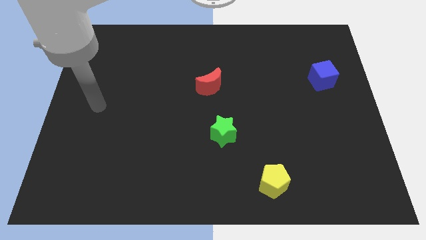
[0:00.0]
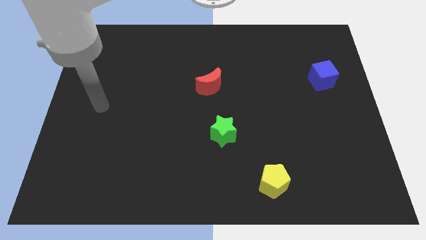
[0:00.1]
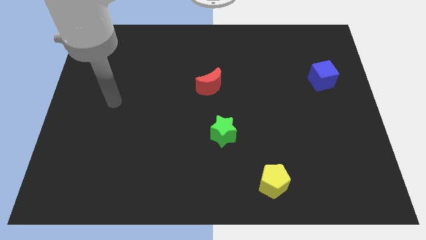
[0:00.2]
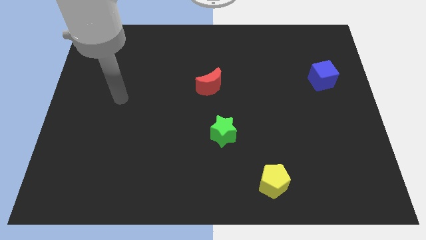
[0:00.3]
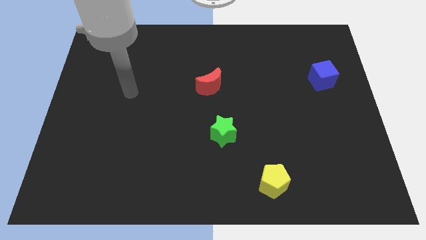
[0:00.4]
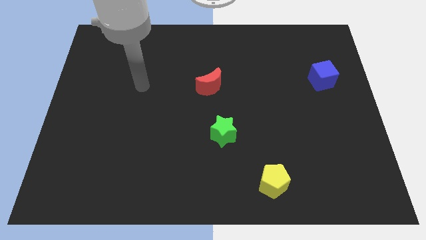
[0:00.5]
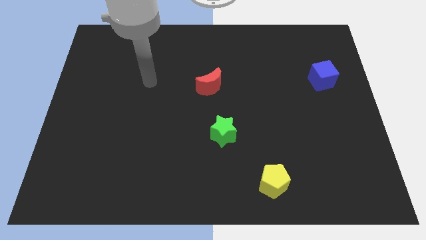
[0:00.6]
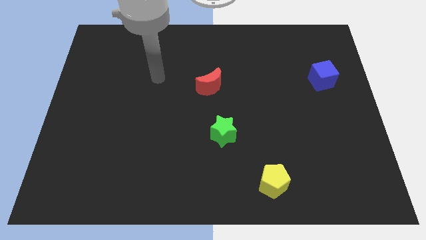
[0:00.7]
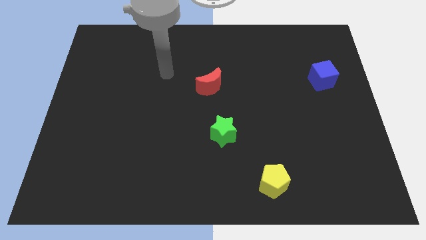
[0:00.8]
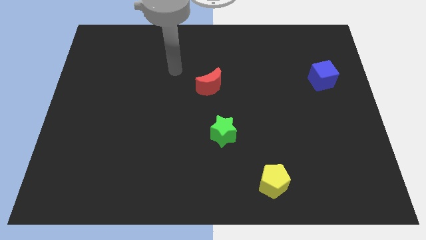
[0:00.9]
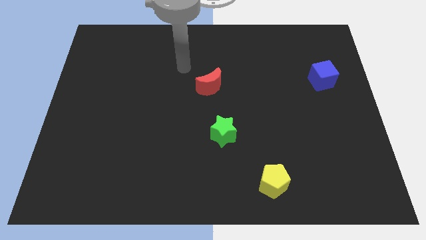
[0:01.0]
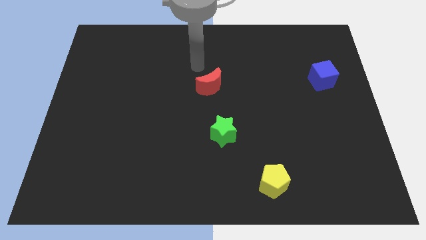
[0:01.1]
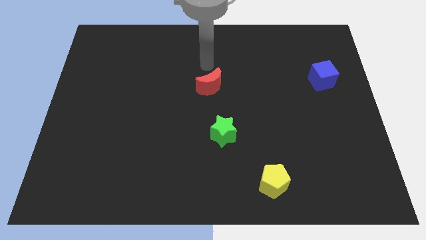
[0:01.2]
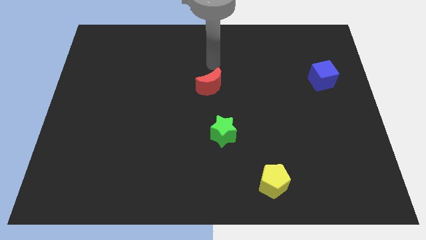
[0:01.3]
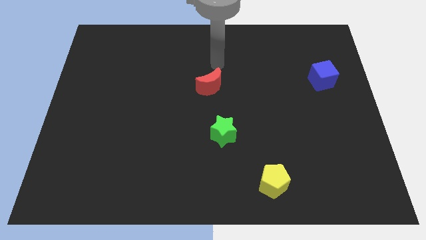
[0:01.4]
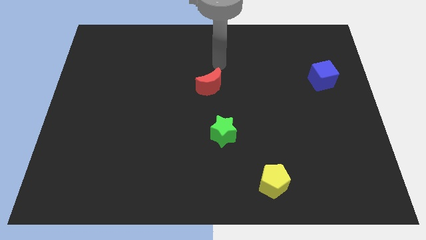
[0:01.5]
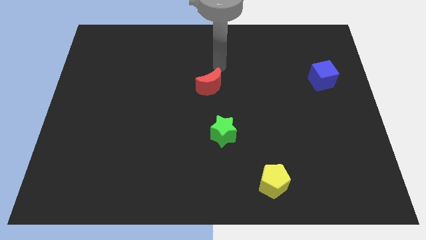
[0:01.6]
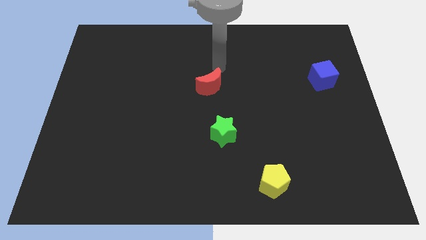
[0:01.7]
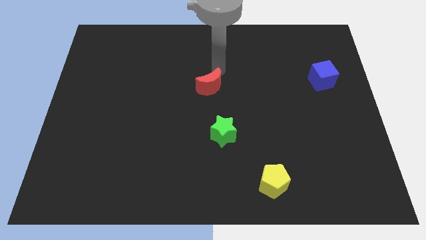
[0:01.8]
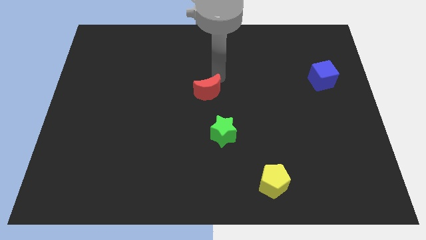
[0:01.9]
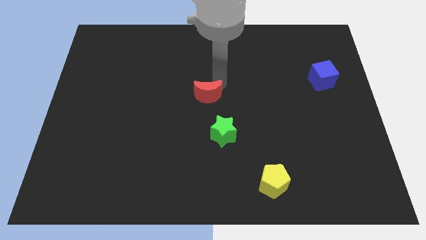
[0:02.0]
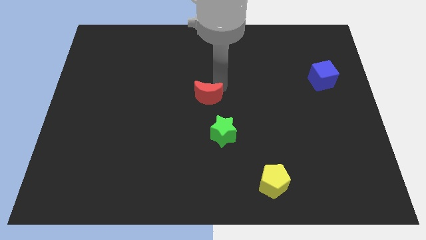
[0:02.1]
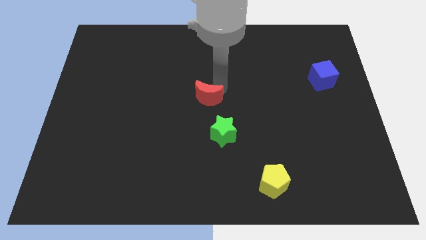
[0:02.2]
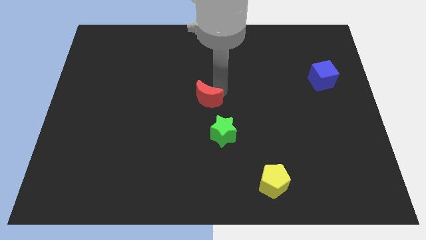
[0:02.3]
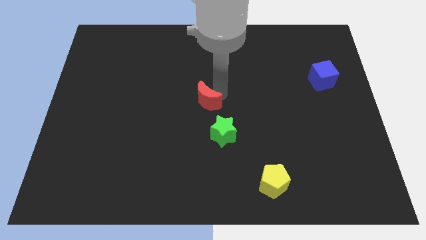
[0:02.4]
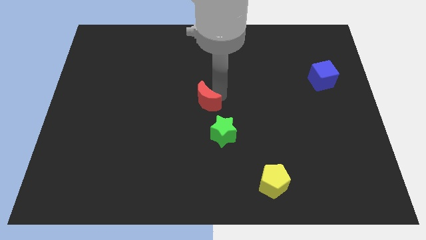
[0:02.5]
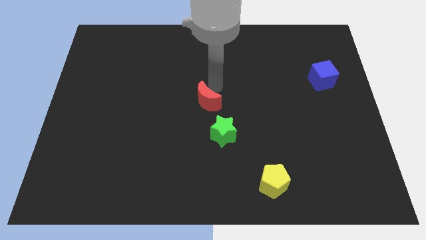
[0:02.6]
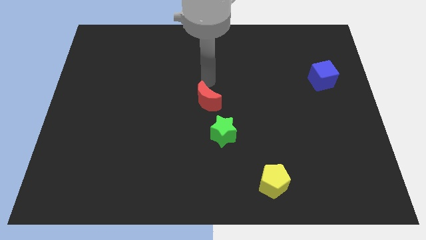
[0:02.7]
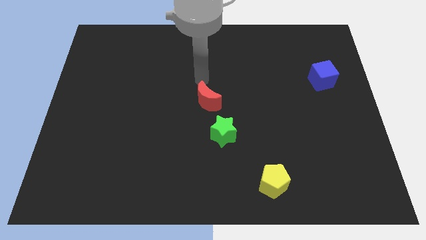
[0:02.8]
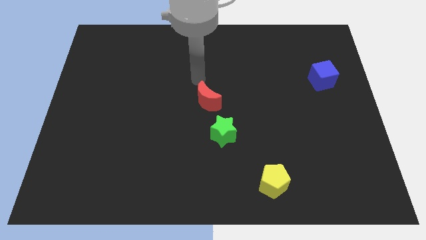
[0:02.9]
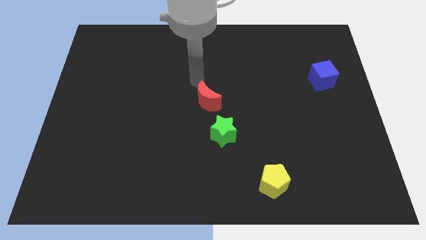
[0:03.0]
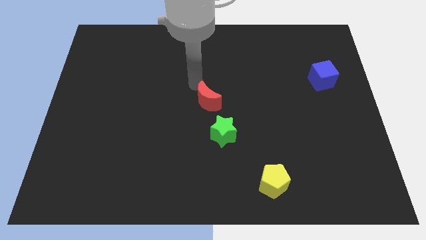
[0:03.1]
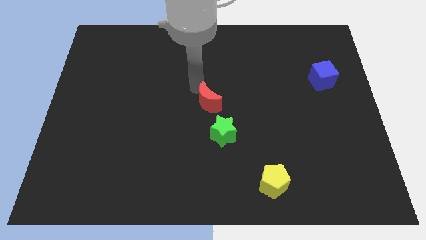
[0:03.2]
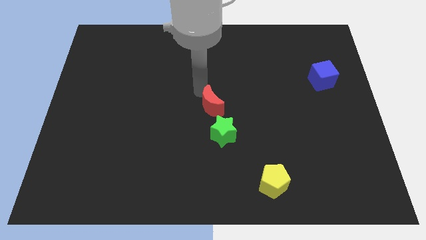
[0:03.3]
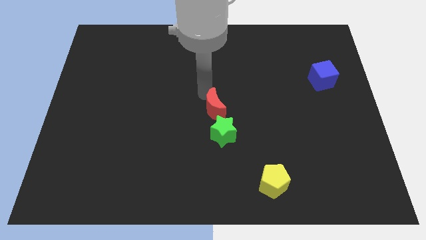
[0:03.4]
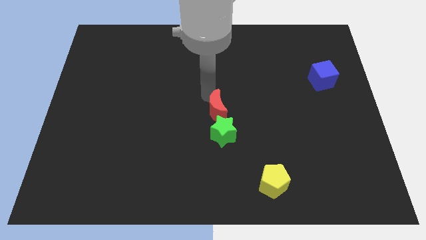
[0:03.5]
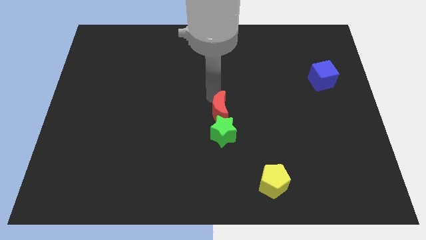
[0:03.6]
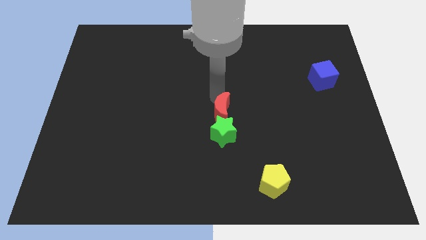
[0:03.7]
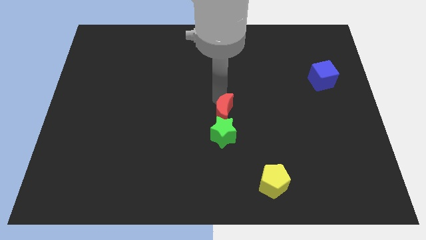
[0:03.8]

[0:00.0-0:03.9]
put the red block to the green block

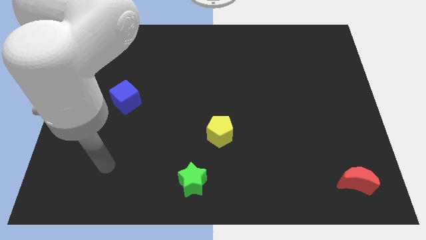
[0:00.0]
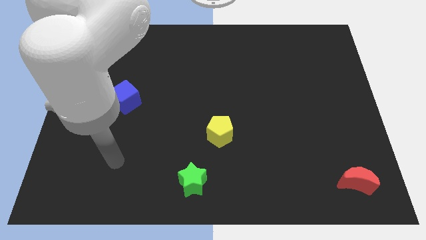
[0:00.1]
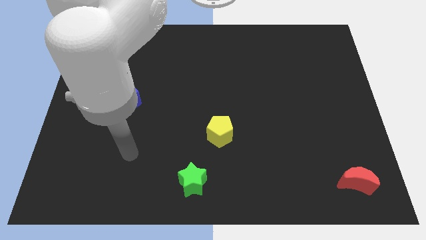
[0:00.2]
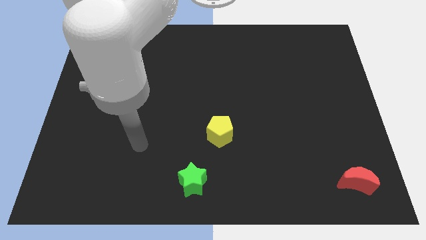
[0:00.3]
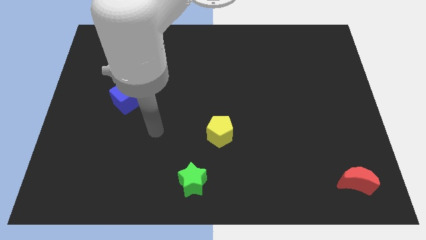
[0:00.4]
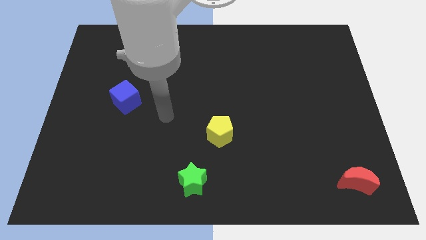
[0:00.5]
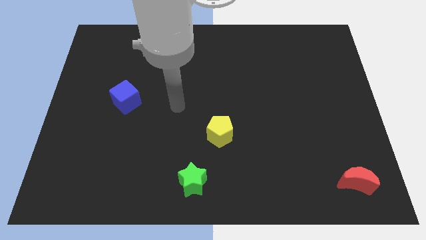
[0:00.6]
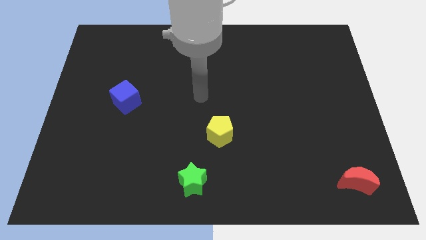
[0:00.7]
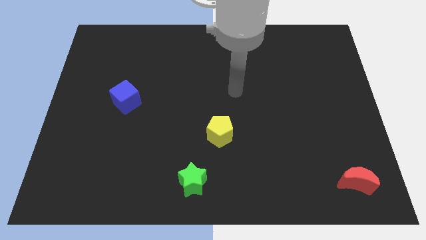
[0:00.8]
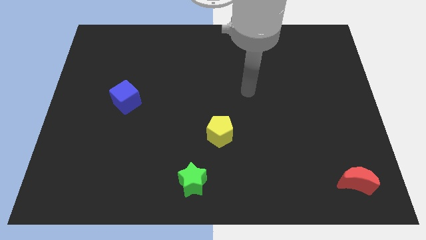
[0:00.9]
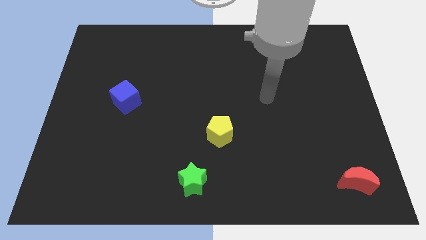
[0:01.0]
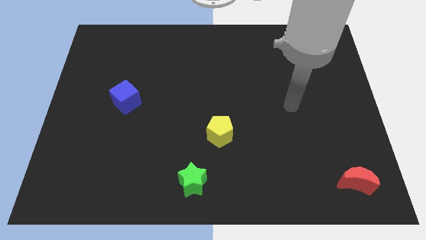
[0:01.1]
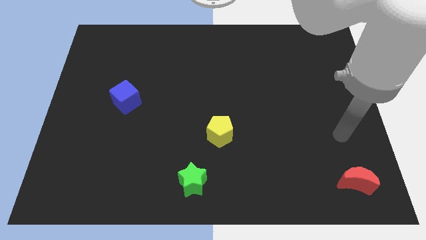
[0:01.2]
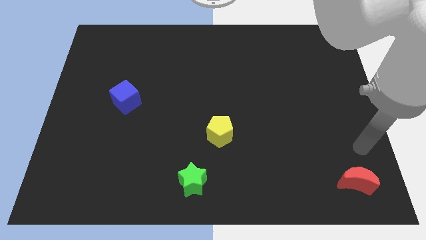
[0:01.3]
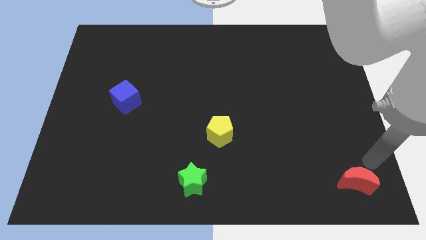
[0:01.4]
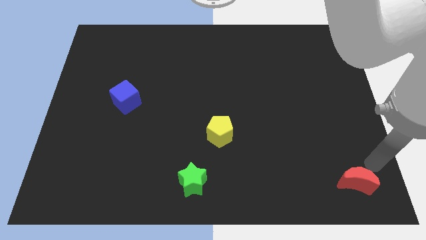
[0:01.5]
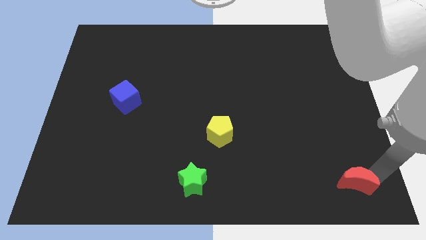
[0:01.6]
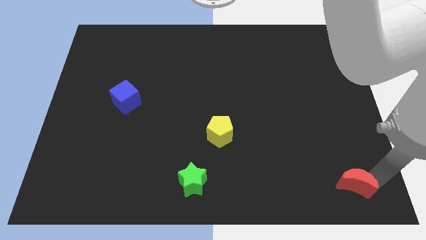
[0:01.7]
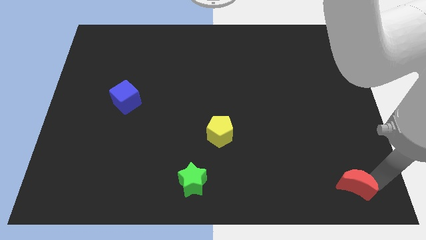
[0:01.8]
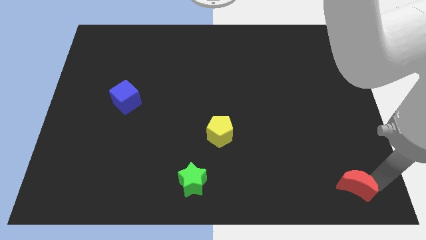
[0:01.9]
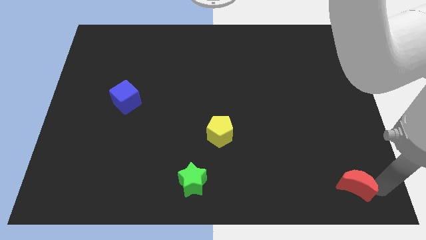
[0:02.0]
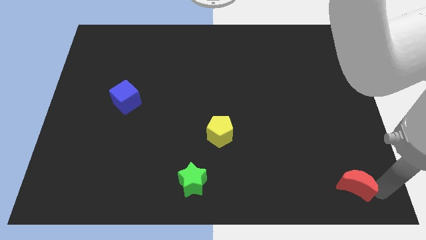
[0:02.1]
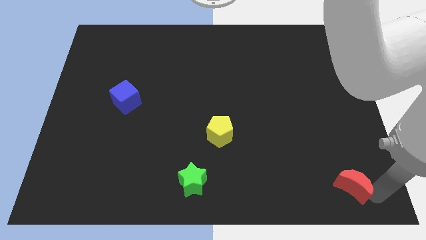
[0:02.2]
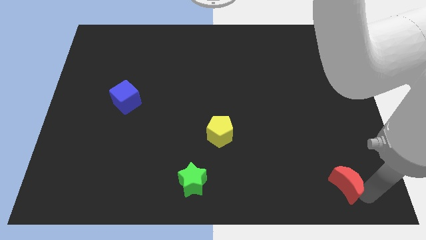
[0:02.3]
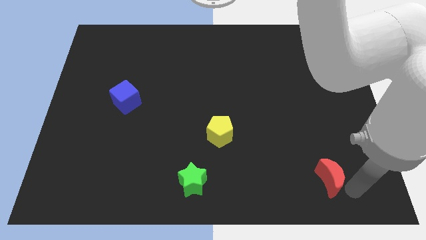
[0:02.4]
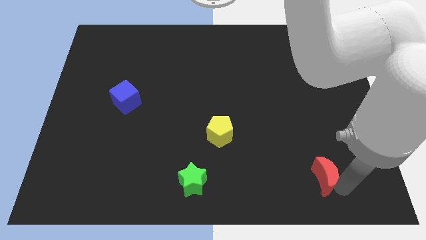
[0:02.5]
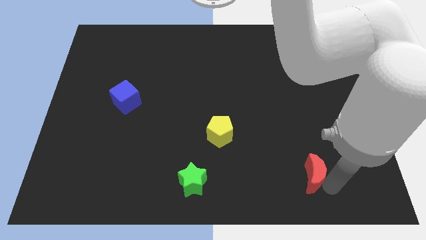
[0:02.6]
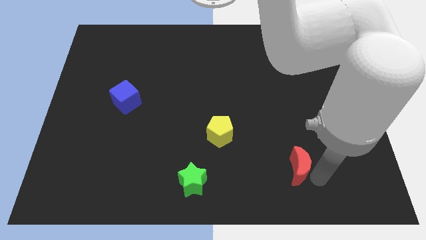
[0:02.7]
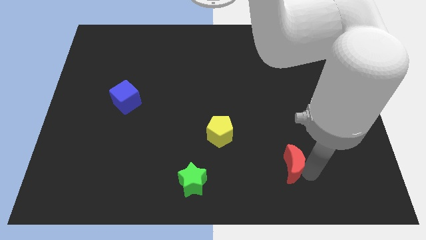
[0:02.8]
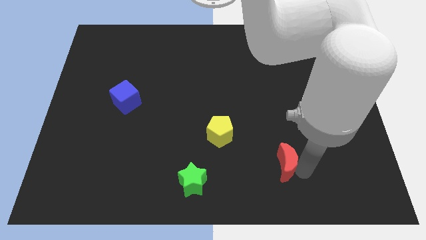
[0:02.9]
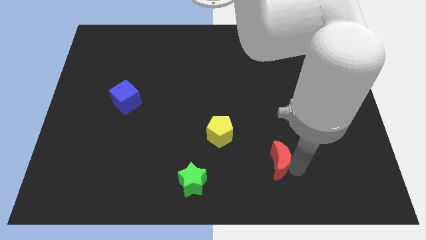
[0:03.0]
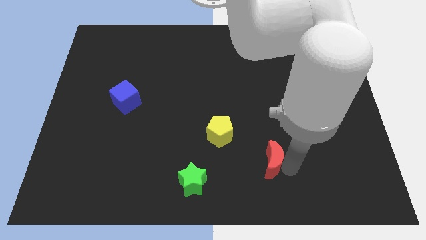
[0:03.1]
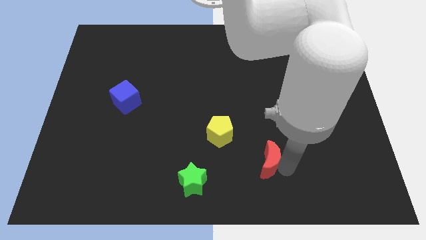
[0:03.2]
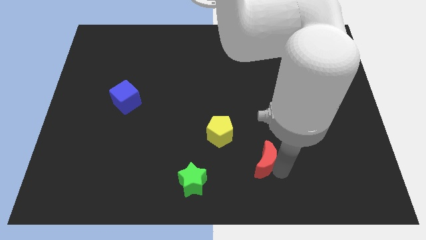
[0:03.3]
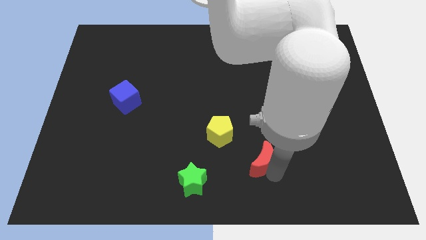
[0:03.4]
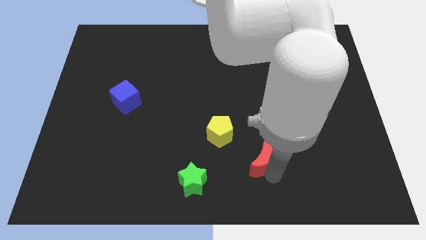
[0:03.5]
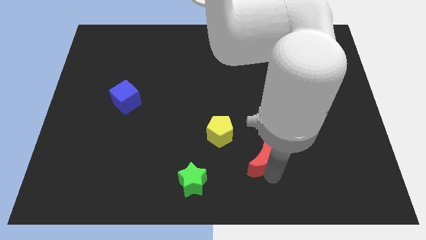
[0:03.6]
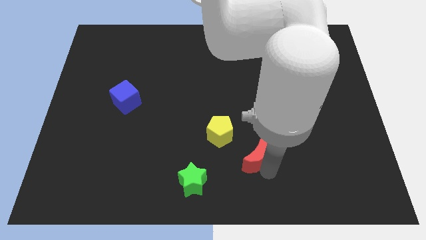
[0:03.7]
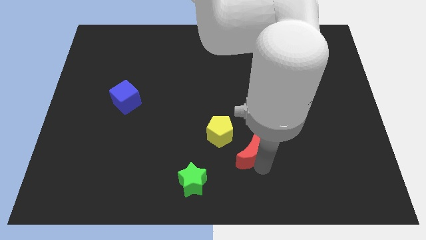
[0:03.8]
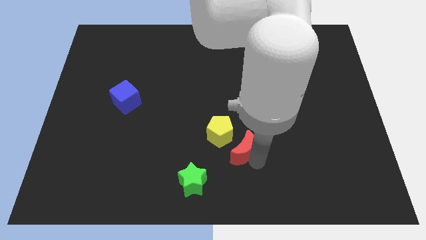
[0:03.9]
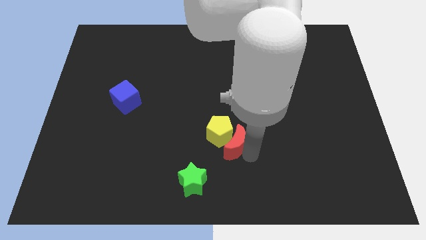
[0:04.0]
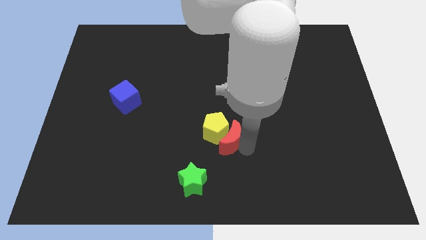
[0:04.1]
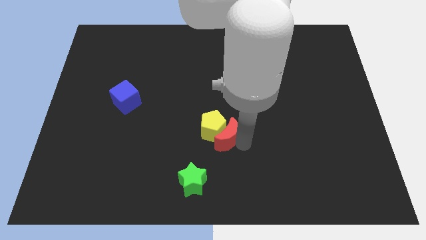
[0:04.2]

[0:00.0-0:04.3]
put the red moon close to the yellow pentagon
